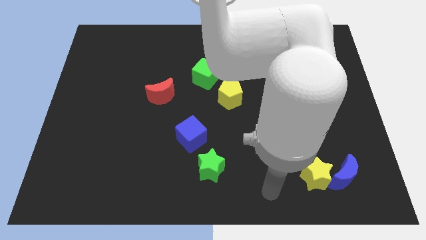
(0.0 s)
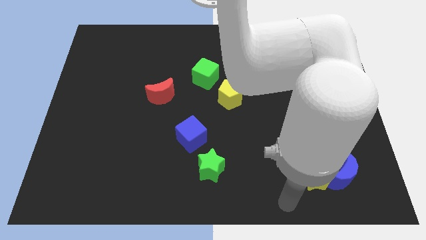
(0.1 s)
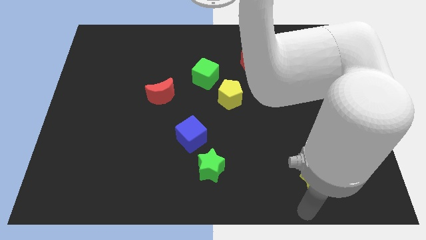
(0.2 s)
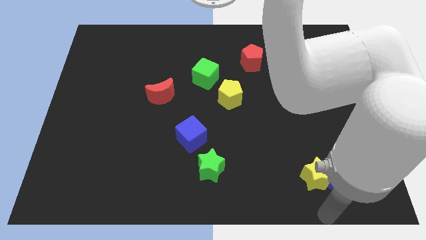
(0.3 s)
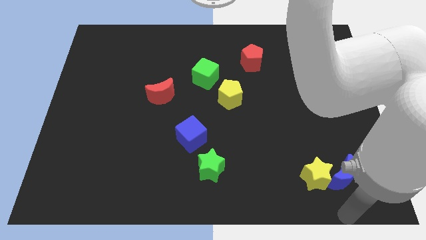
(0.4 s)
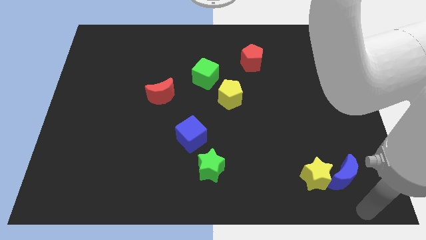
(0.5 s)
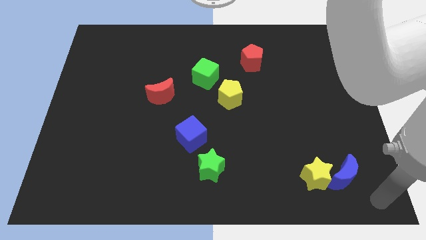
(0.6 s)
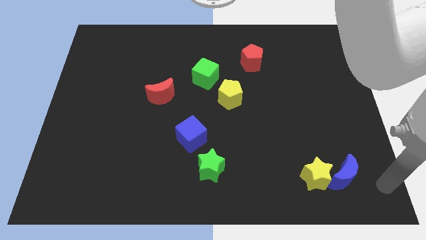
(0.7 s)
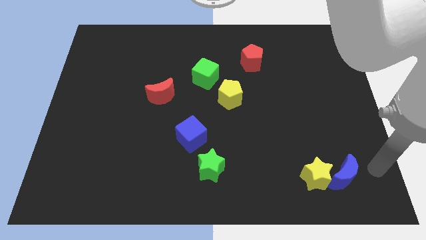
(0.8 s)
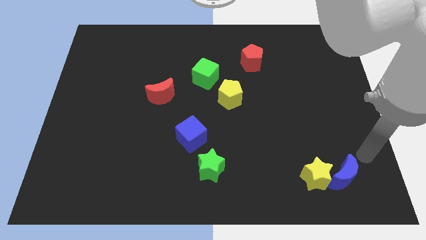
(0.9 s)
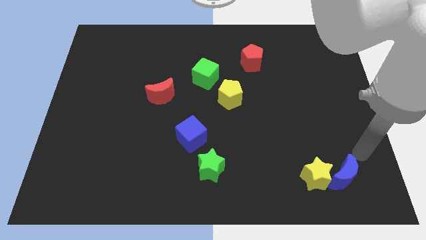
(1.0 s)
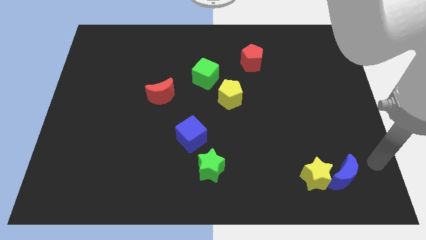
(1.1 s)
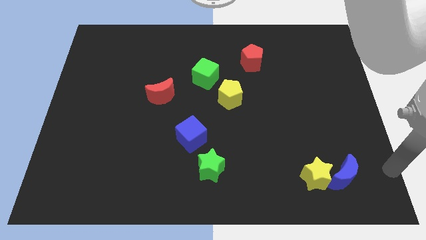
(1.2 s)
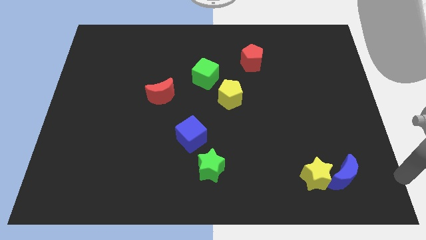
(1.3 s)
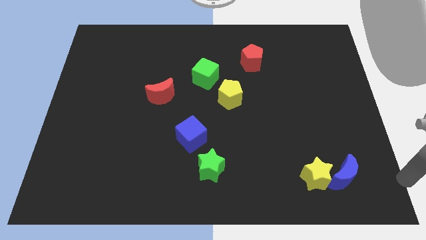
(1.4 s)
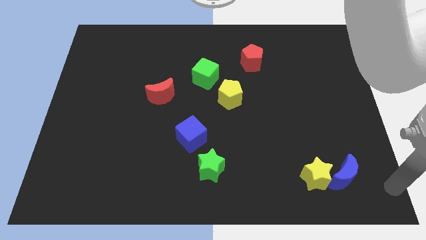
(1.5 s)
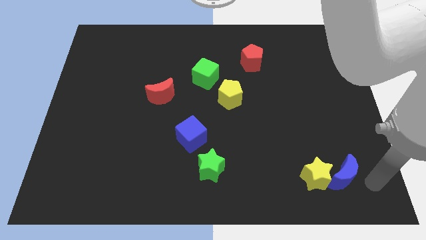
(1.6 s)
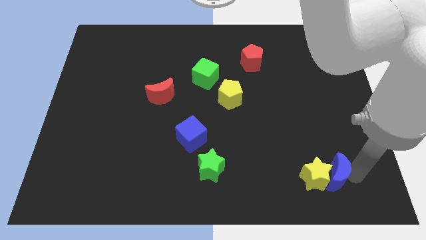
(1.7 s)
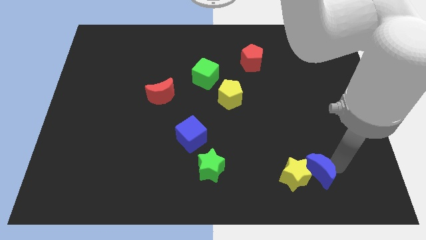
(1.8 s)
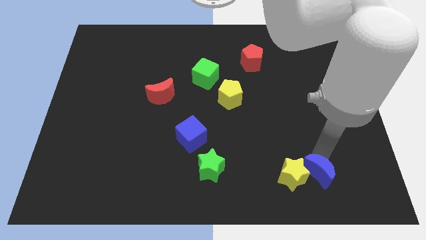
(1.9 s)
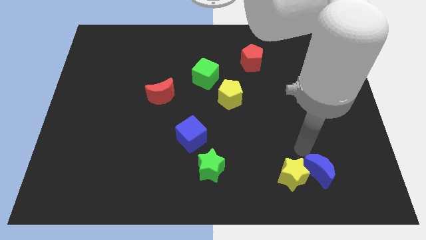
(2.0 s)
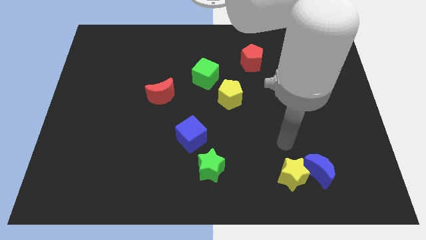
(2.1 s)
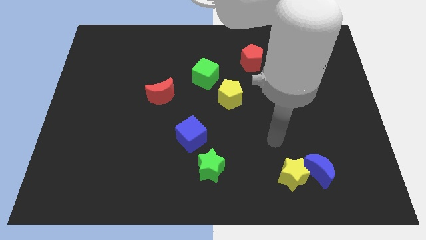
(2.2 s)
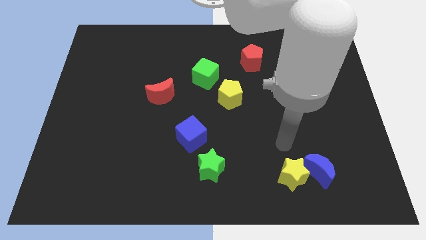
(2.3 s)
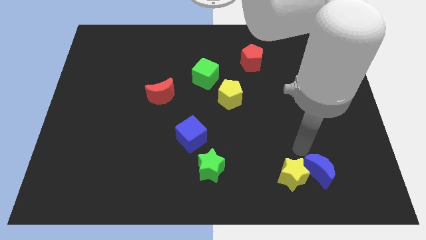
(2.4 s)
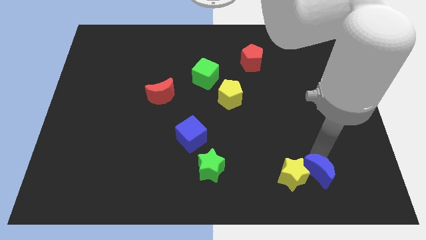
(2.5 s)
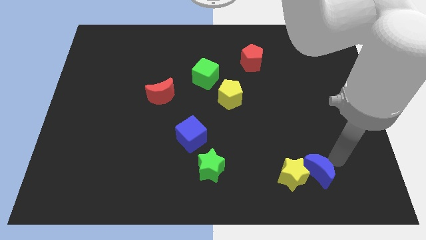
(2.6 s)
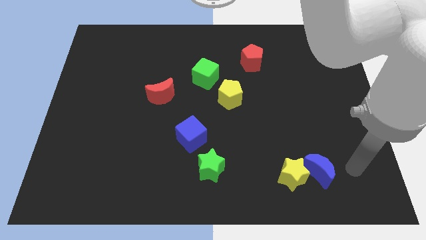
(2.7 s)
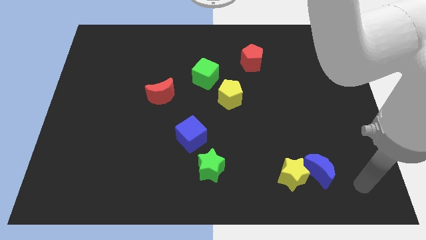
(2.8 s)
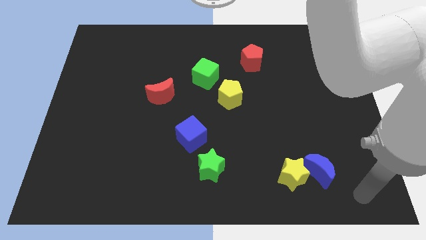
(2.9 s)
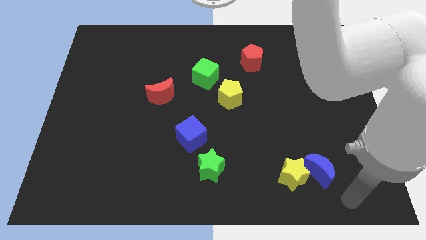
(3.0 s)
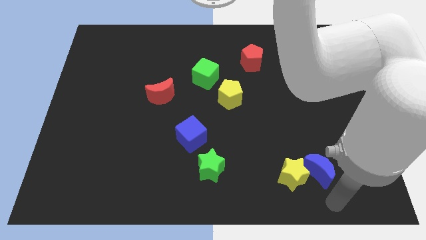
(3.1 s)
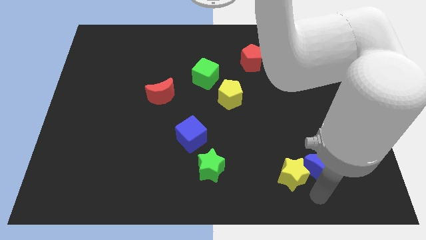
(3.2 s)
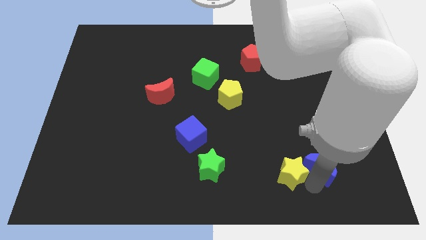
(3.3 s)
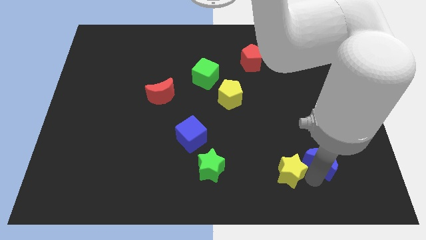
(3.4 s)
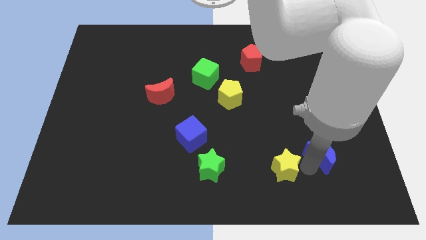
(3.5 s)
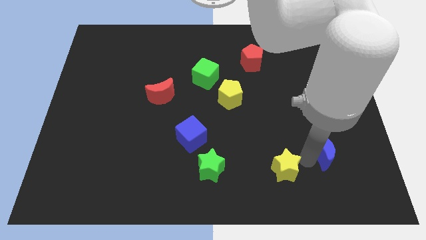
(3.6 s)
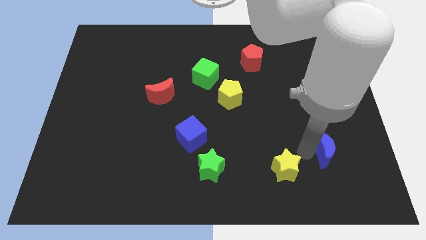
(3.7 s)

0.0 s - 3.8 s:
place your arm in between yellow star and blue moon

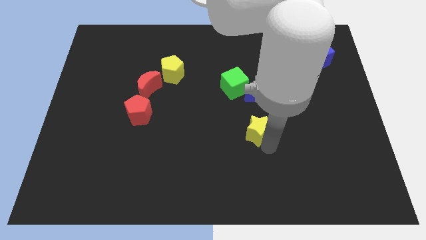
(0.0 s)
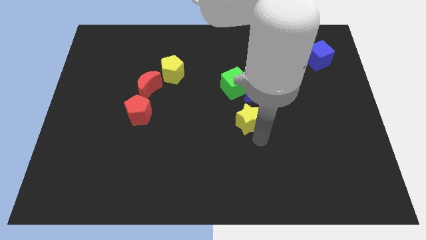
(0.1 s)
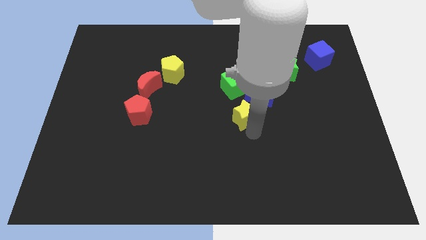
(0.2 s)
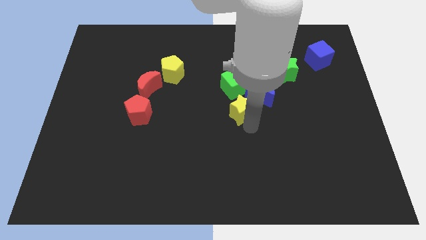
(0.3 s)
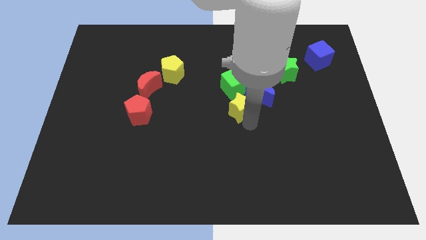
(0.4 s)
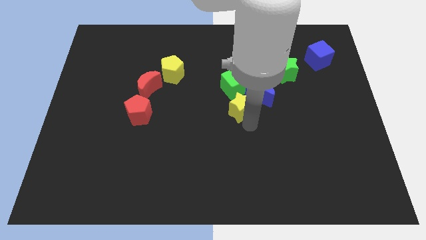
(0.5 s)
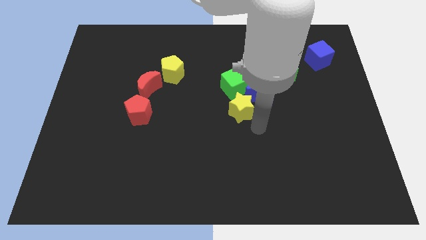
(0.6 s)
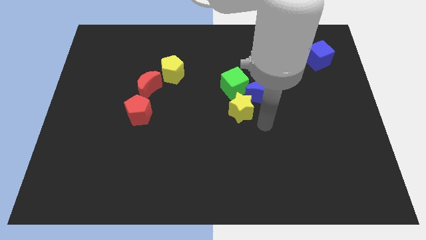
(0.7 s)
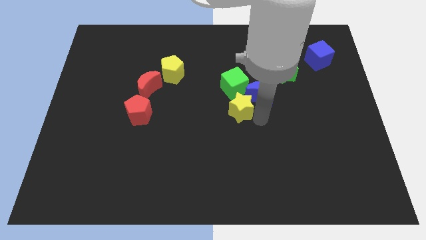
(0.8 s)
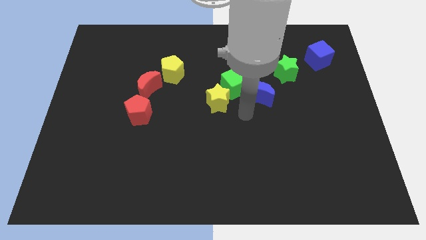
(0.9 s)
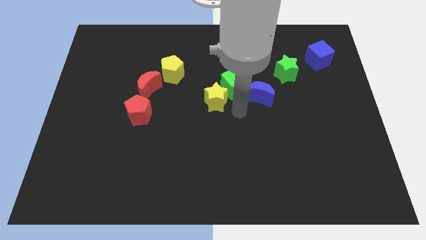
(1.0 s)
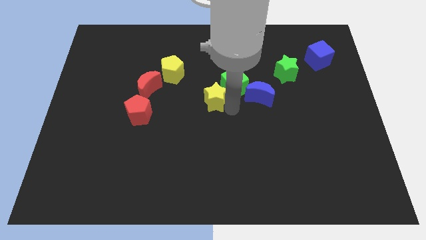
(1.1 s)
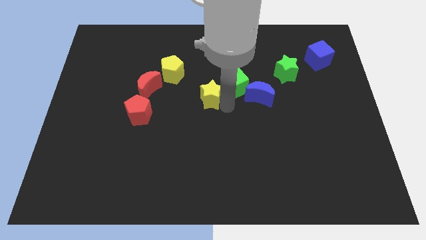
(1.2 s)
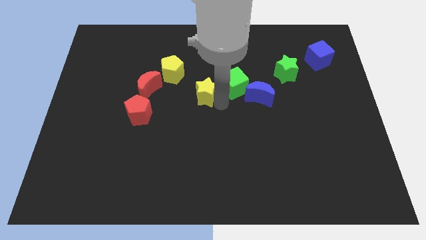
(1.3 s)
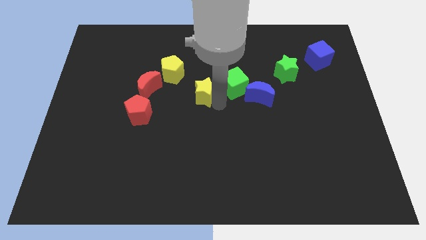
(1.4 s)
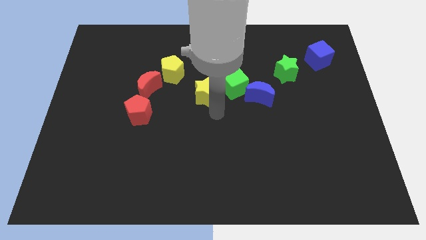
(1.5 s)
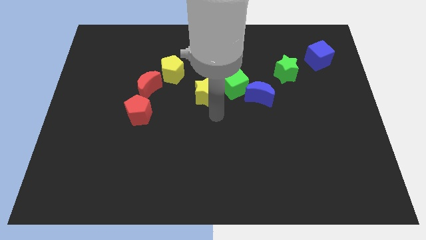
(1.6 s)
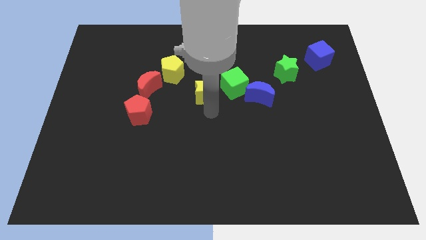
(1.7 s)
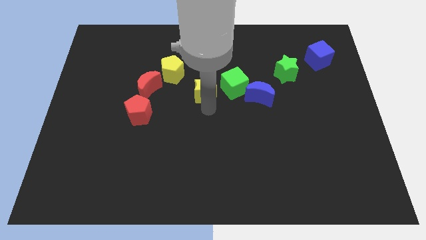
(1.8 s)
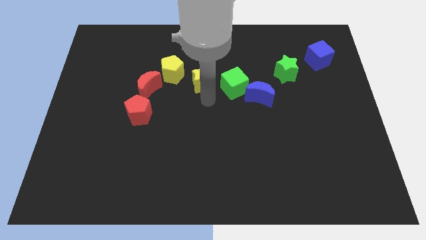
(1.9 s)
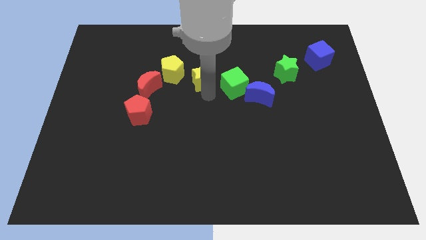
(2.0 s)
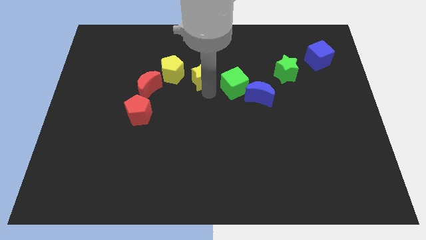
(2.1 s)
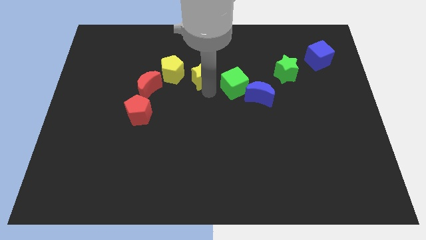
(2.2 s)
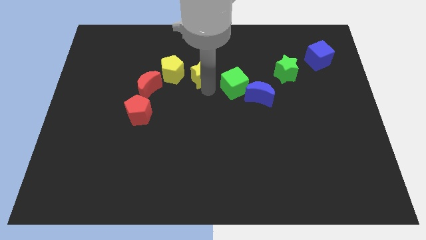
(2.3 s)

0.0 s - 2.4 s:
place the yellow star in between yellow pentagon and green cube

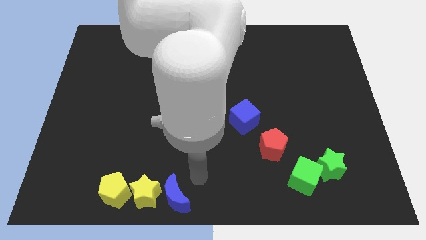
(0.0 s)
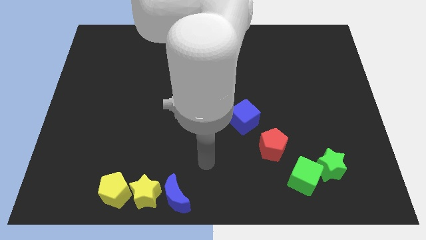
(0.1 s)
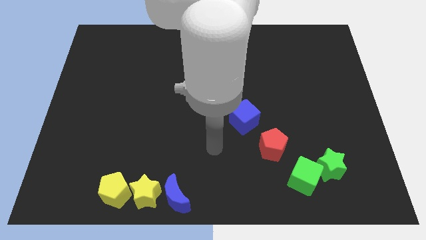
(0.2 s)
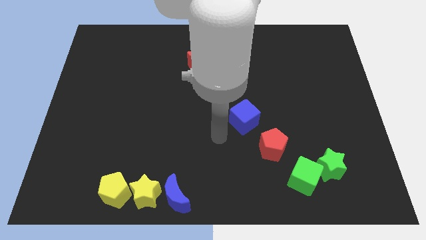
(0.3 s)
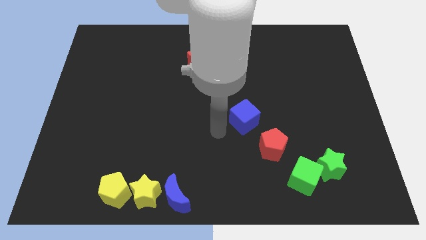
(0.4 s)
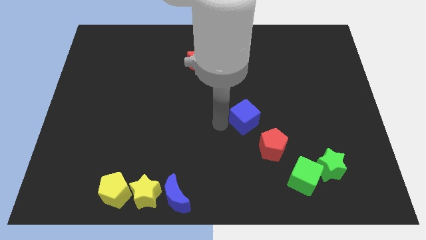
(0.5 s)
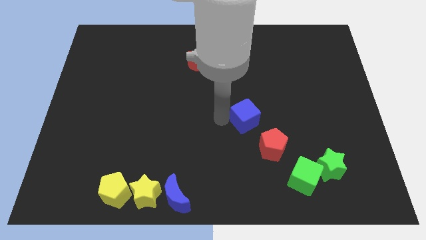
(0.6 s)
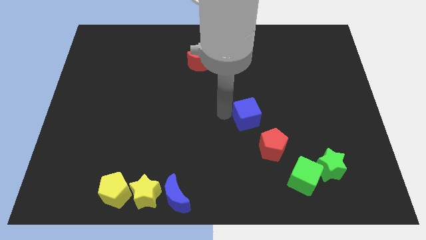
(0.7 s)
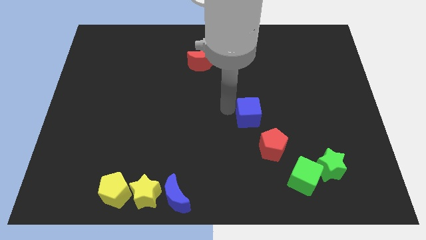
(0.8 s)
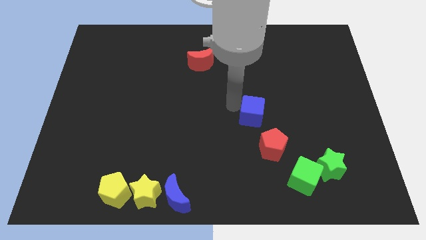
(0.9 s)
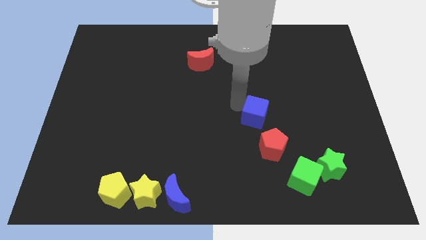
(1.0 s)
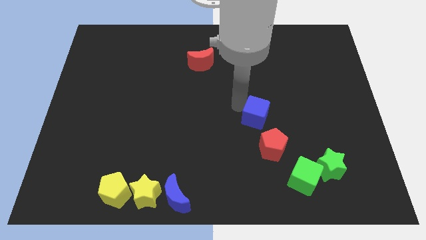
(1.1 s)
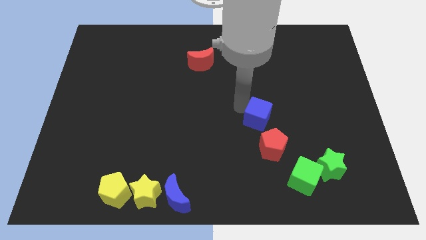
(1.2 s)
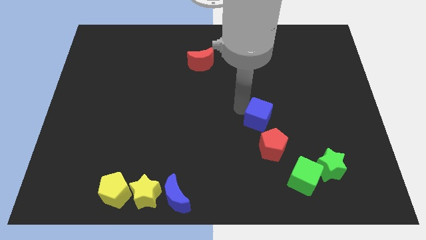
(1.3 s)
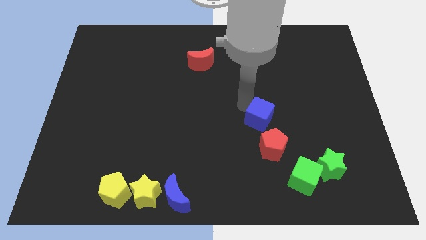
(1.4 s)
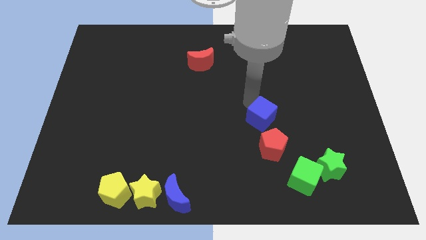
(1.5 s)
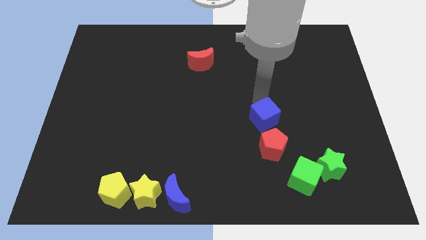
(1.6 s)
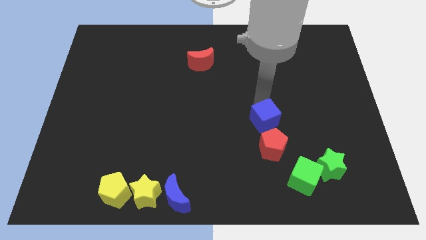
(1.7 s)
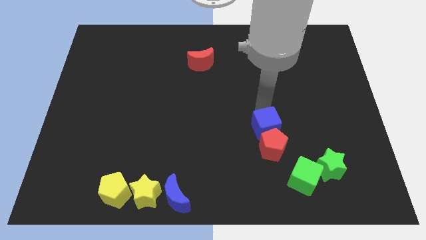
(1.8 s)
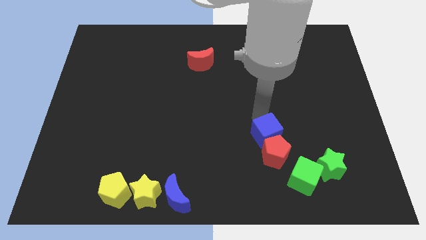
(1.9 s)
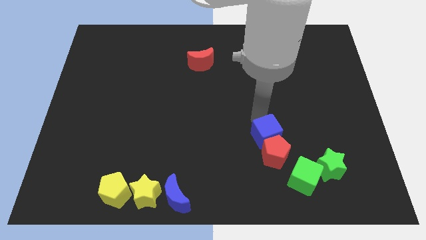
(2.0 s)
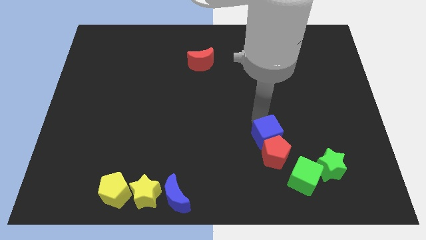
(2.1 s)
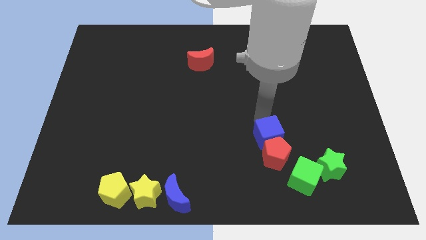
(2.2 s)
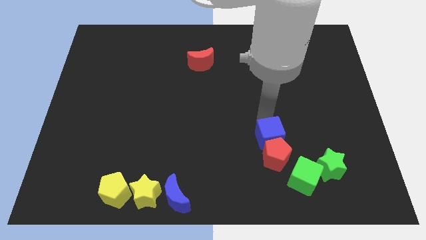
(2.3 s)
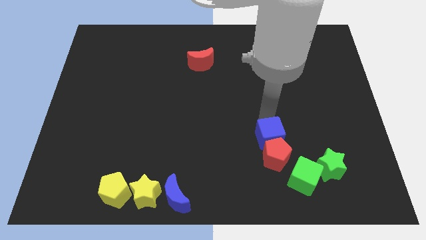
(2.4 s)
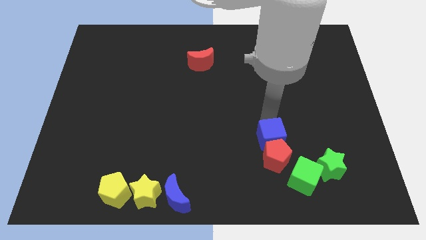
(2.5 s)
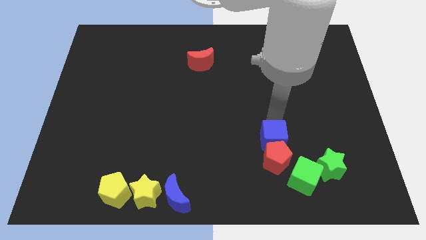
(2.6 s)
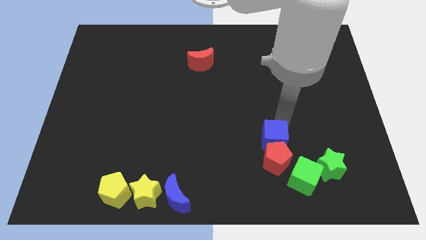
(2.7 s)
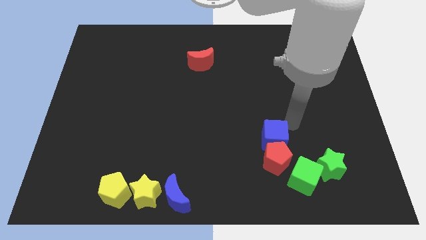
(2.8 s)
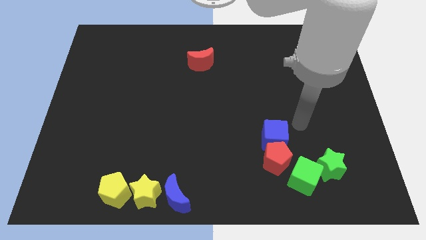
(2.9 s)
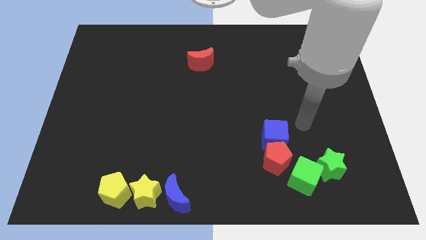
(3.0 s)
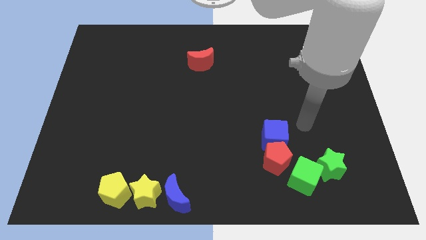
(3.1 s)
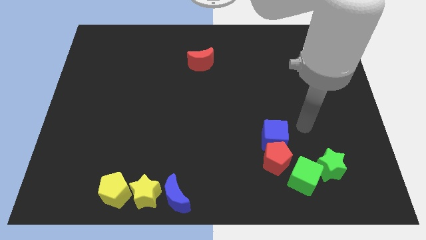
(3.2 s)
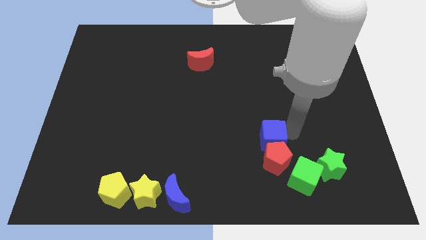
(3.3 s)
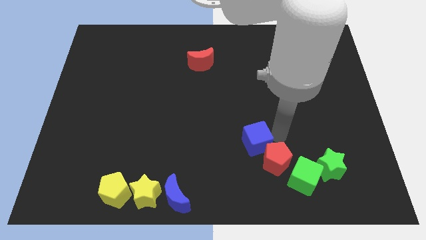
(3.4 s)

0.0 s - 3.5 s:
push the blue cube into the red pentagon
